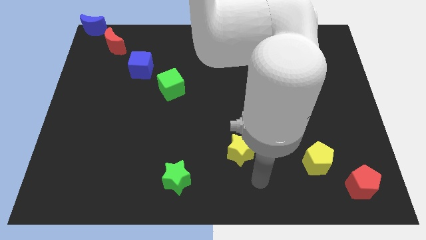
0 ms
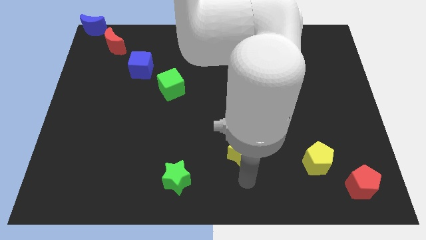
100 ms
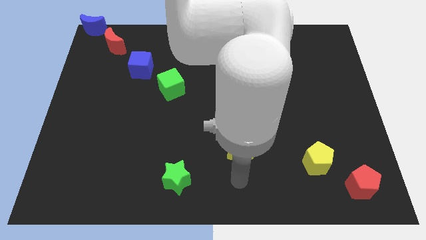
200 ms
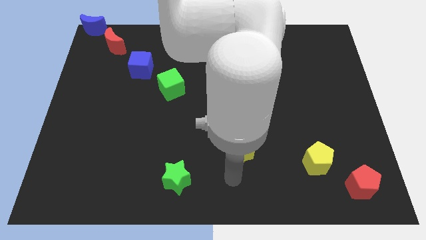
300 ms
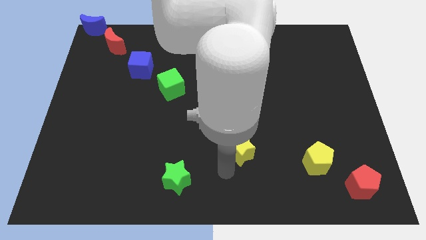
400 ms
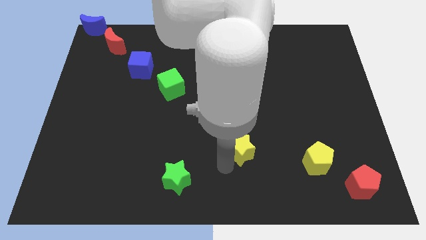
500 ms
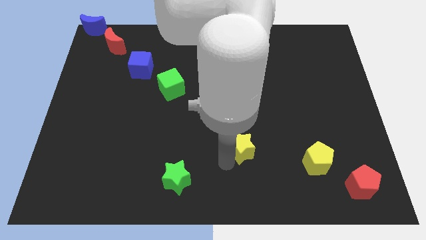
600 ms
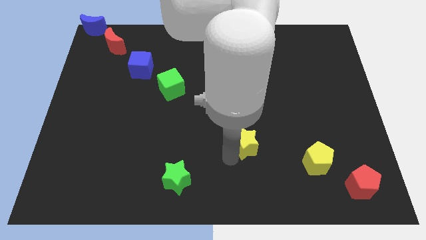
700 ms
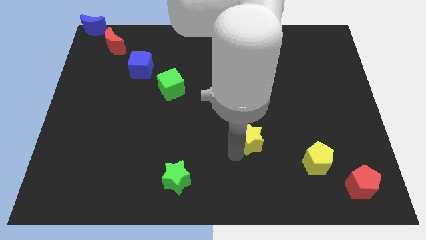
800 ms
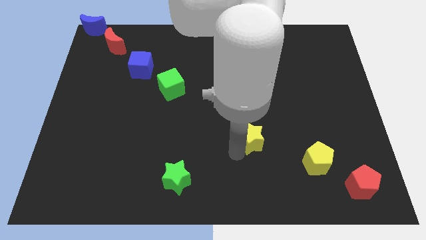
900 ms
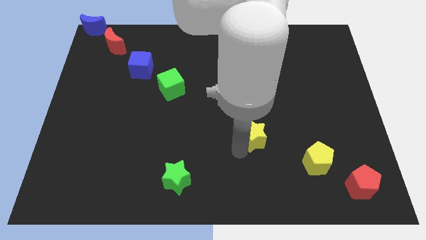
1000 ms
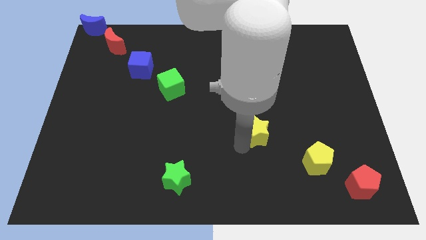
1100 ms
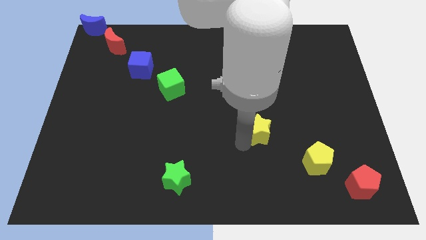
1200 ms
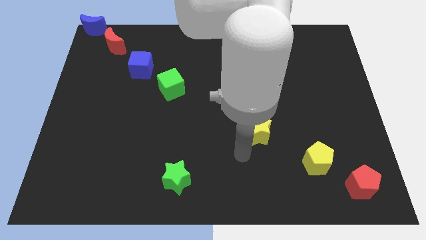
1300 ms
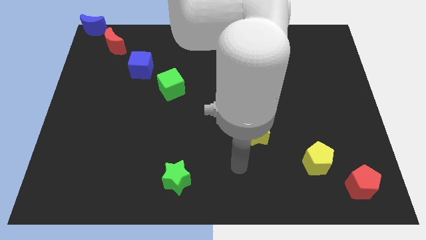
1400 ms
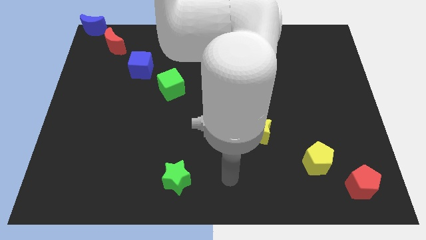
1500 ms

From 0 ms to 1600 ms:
push the yellow star slightly towards the top side of the board

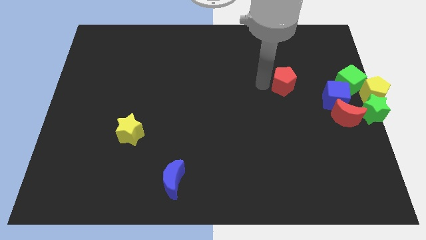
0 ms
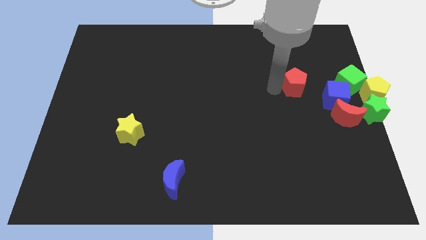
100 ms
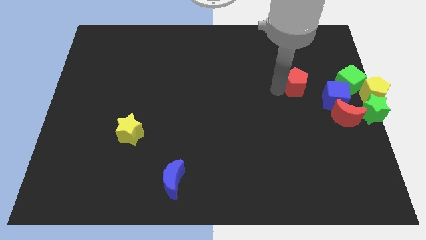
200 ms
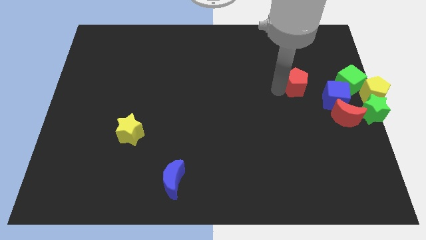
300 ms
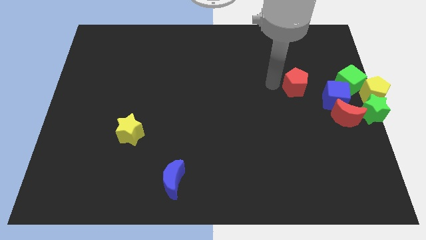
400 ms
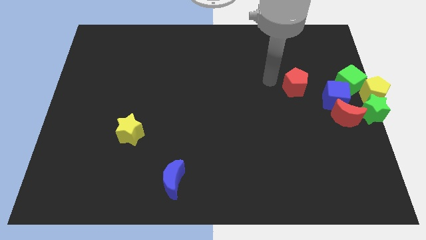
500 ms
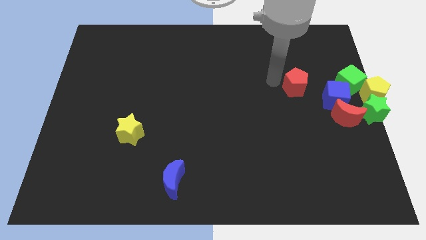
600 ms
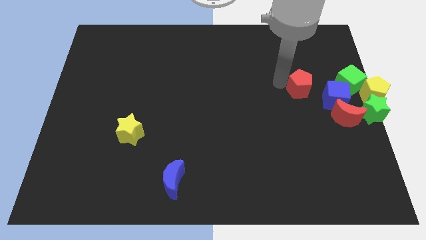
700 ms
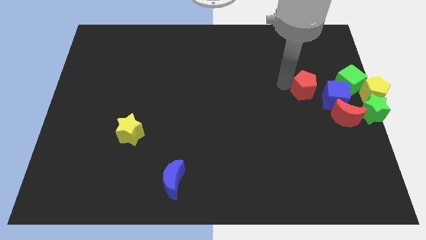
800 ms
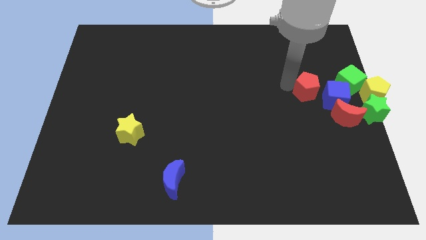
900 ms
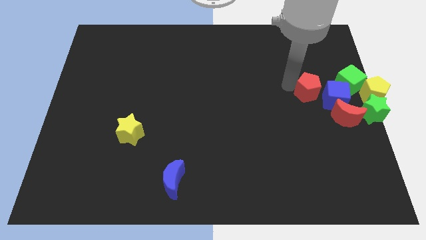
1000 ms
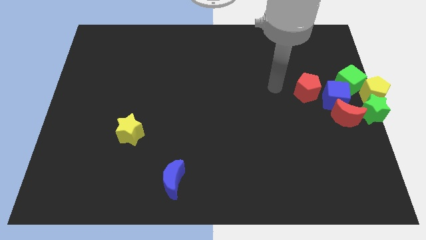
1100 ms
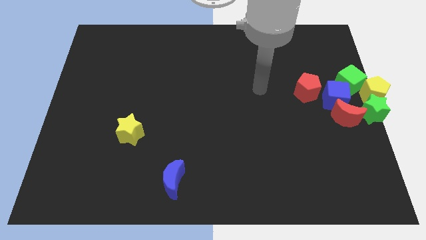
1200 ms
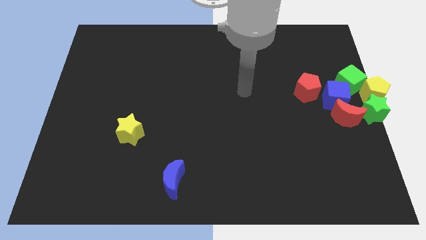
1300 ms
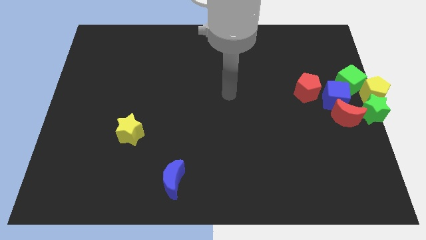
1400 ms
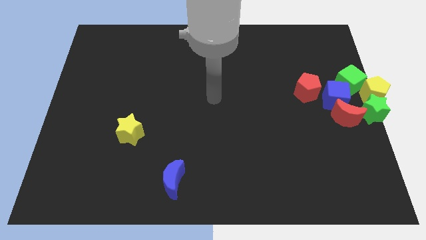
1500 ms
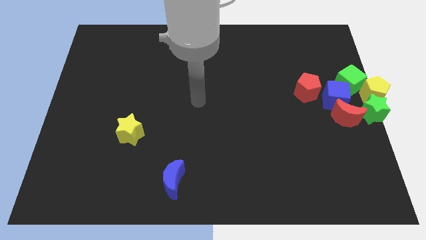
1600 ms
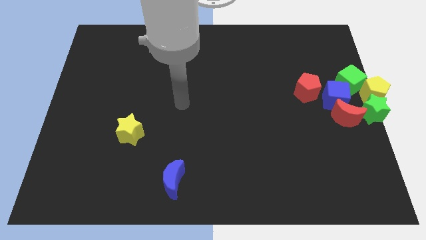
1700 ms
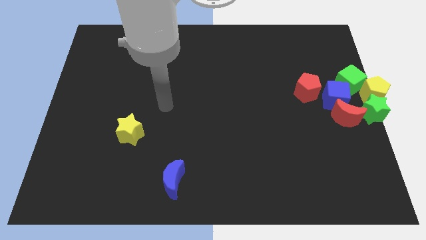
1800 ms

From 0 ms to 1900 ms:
put the red pentagon left to the blue cube

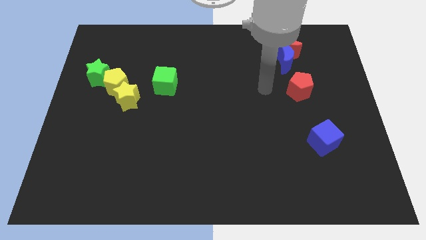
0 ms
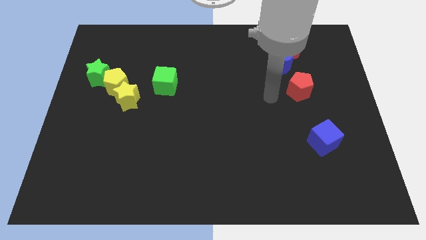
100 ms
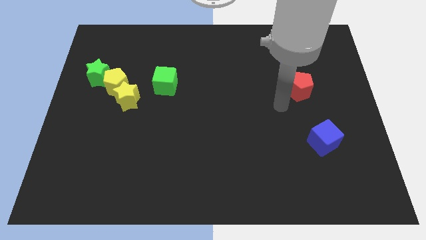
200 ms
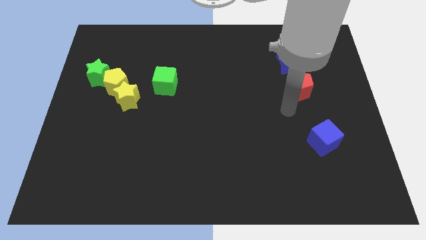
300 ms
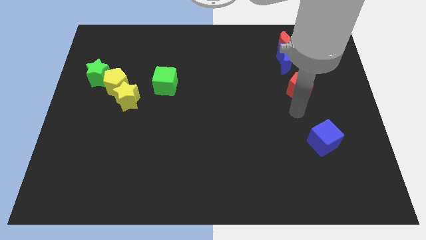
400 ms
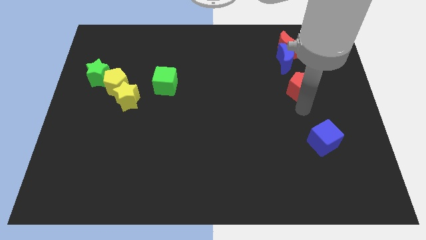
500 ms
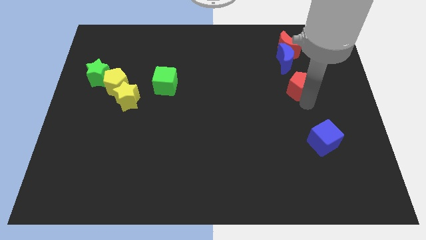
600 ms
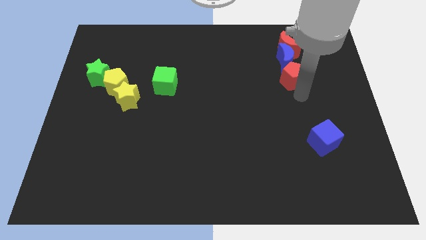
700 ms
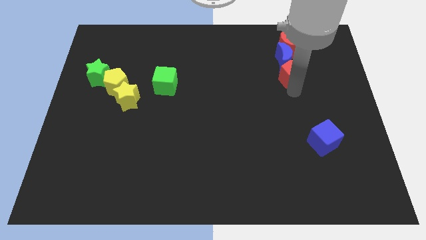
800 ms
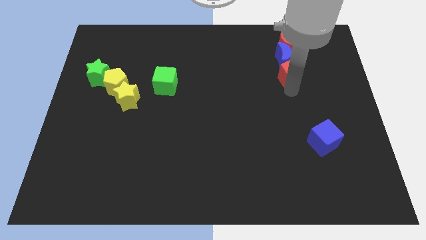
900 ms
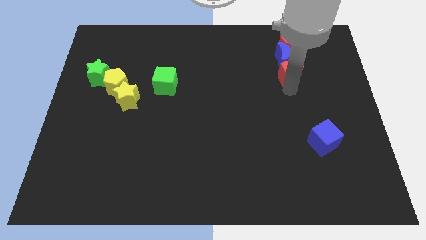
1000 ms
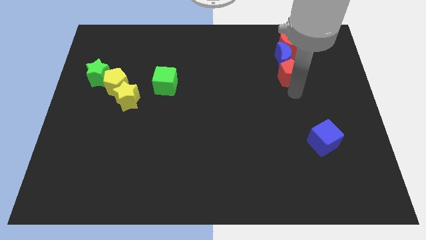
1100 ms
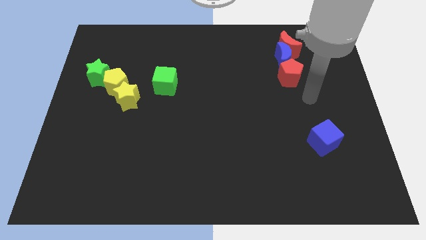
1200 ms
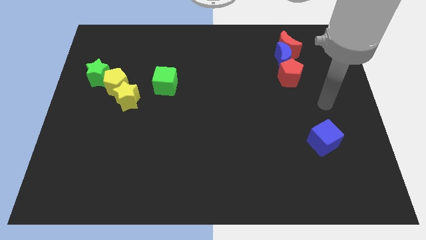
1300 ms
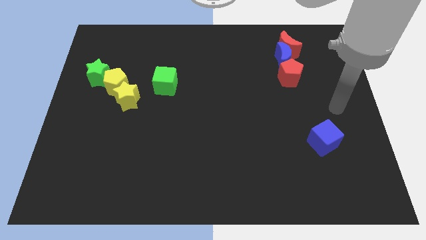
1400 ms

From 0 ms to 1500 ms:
push the red pentagon to the bottom of the blue crescent

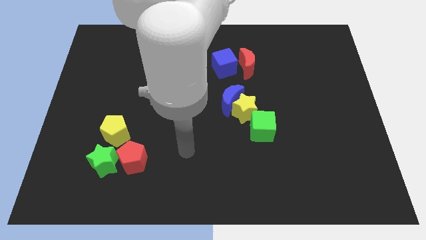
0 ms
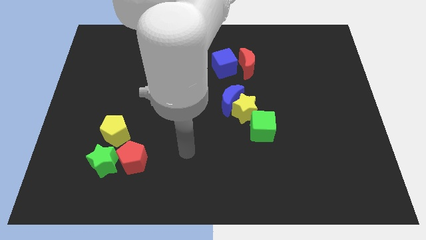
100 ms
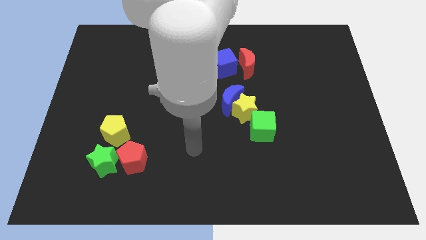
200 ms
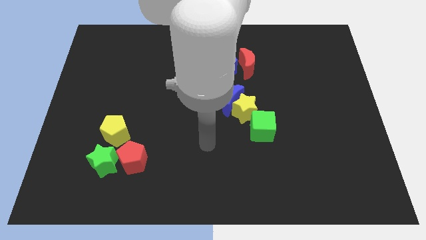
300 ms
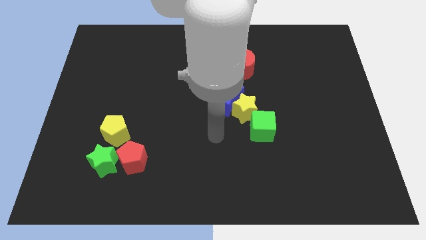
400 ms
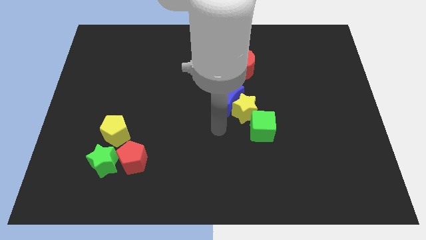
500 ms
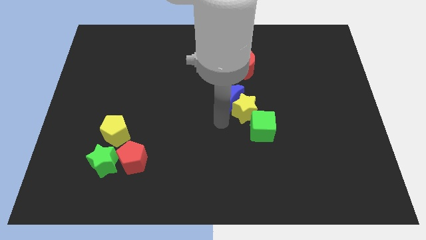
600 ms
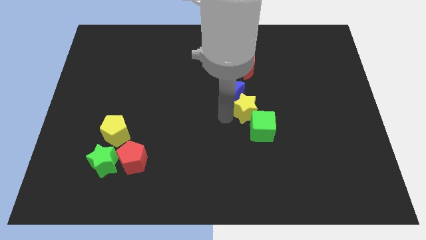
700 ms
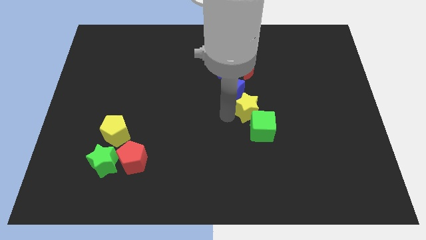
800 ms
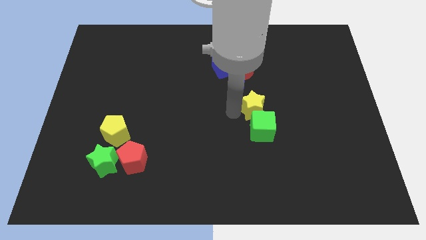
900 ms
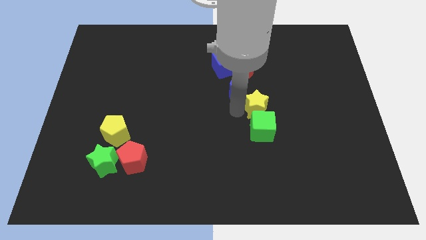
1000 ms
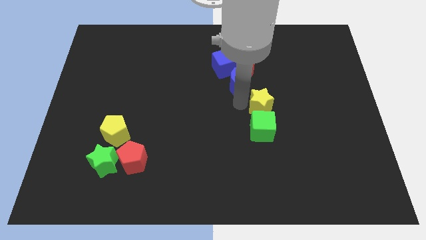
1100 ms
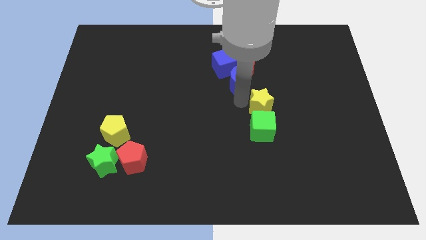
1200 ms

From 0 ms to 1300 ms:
separate the blue crescent and yellow star

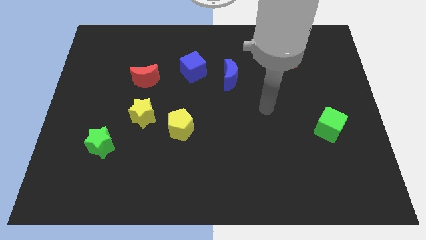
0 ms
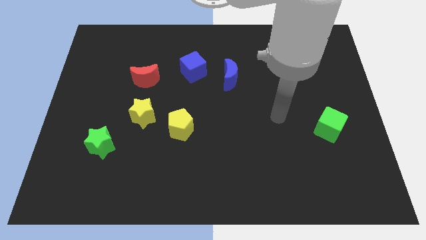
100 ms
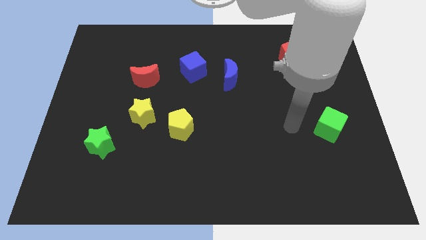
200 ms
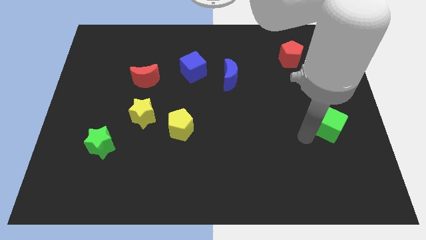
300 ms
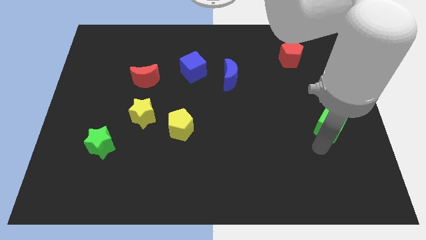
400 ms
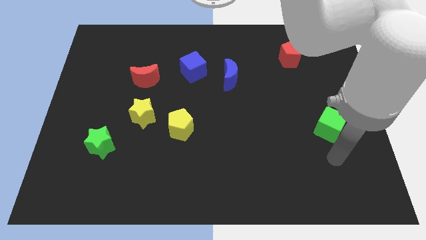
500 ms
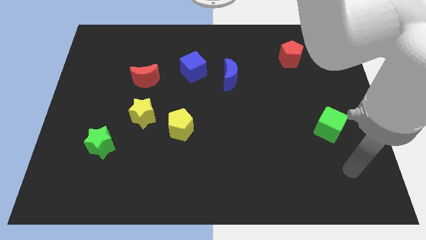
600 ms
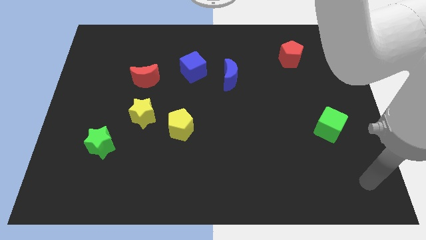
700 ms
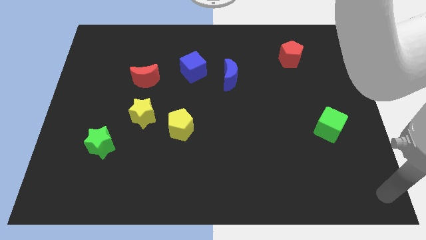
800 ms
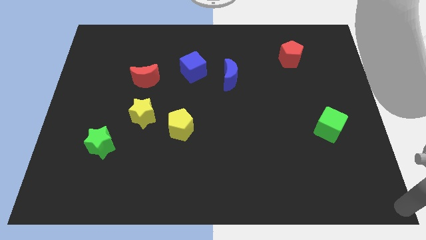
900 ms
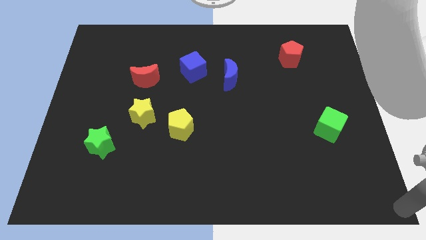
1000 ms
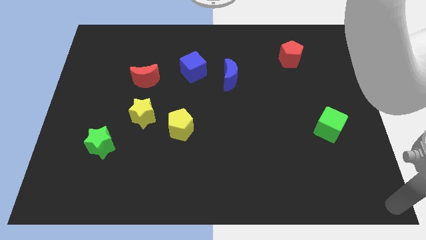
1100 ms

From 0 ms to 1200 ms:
move your arm to the bottom right of the board

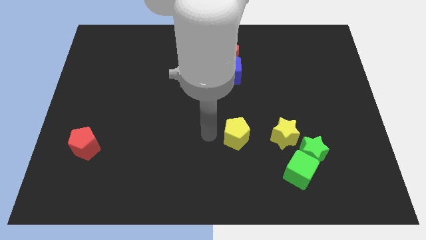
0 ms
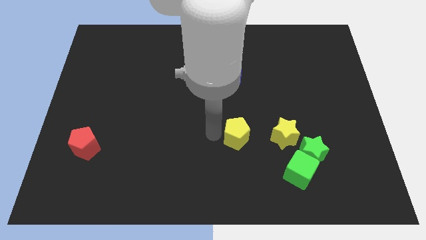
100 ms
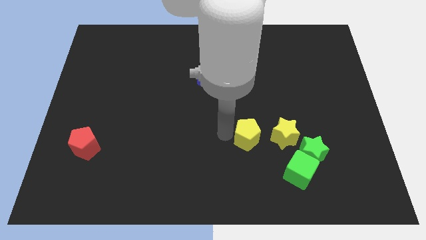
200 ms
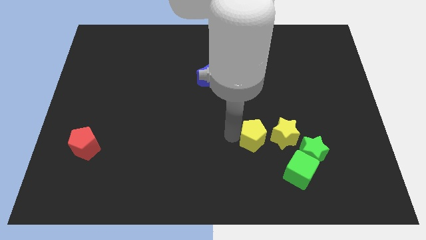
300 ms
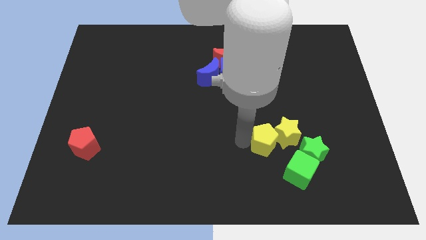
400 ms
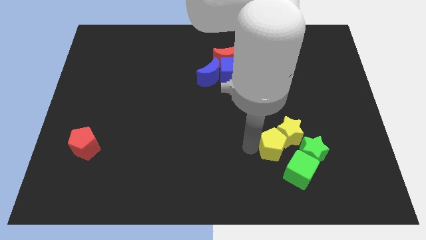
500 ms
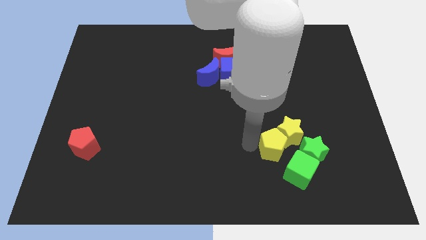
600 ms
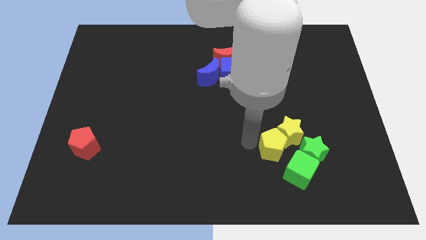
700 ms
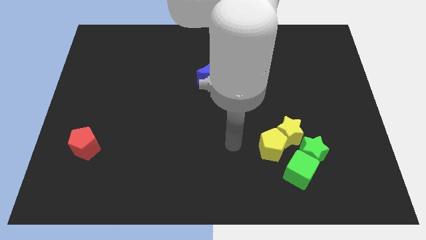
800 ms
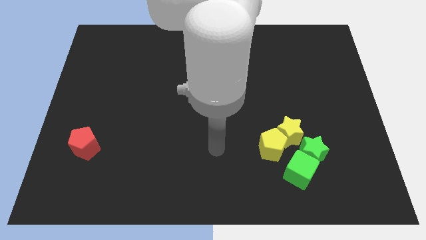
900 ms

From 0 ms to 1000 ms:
push the yellow pentagon into the yellow star

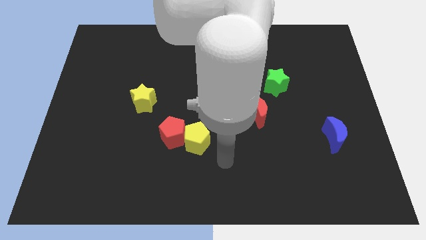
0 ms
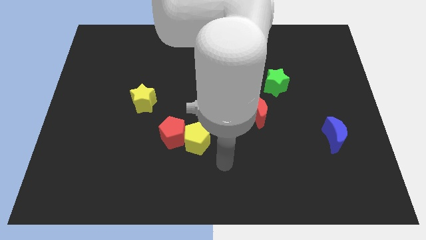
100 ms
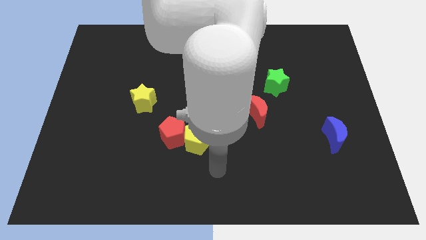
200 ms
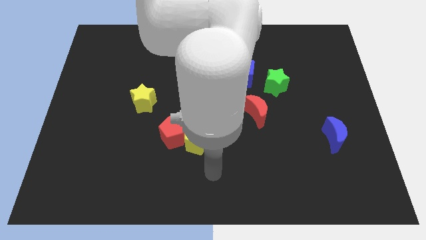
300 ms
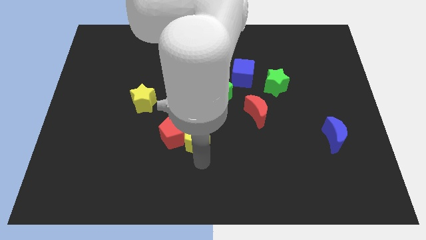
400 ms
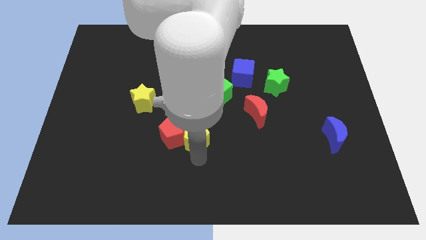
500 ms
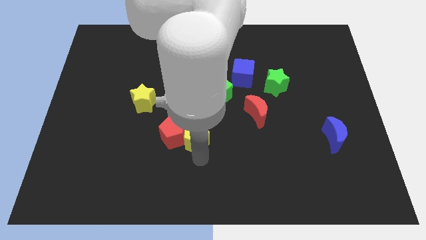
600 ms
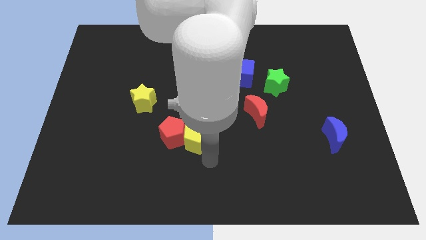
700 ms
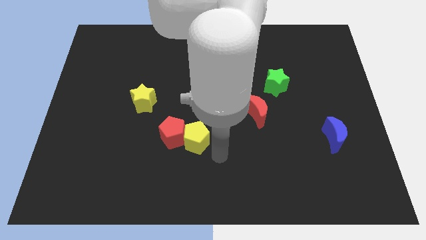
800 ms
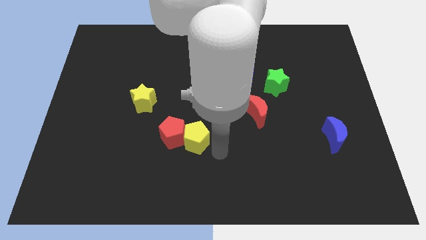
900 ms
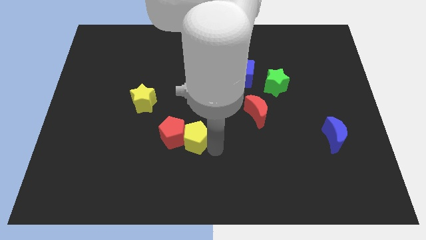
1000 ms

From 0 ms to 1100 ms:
point your arm to the right side of yellow pentagon
